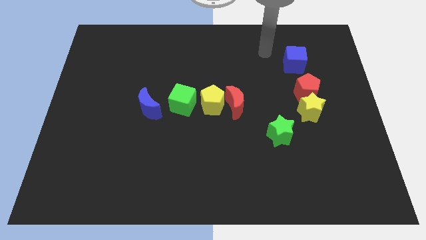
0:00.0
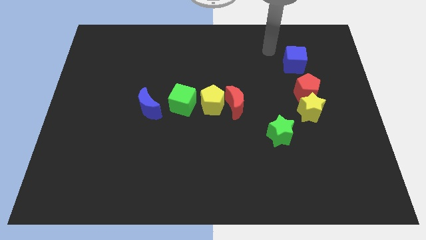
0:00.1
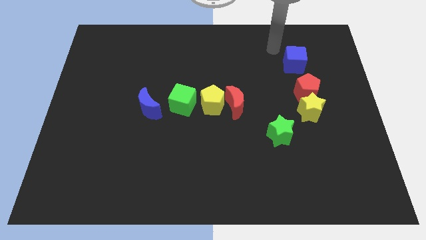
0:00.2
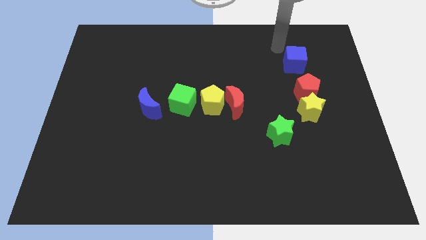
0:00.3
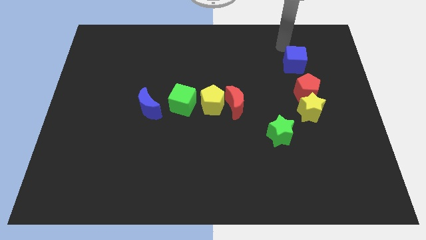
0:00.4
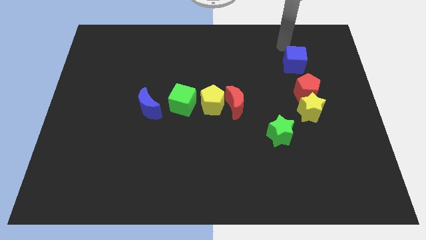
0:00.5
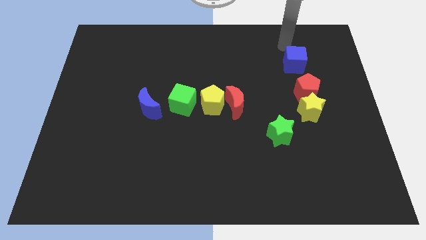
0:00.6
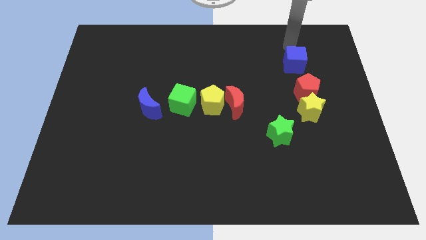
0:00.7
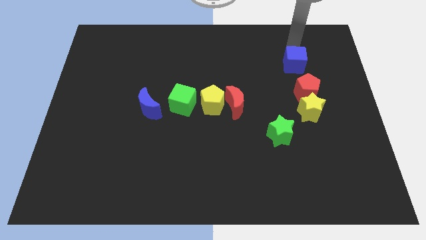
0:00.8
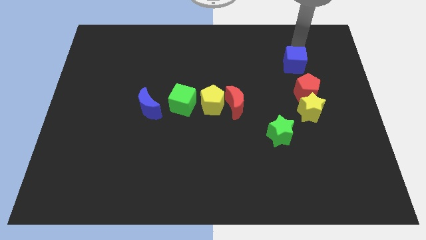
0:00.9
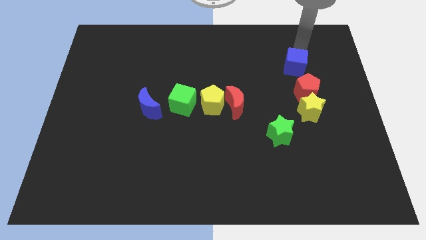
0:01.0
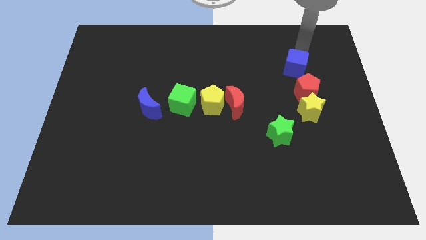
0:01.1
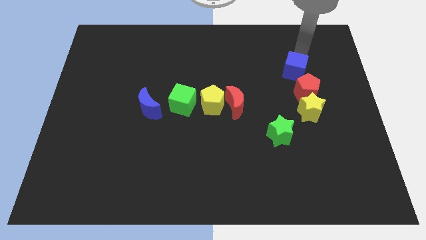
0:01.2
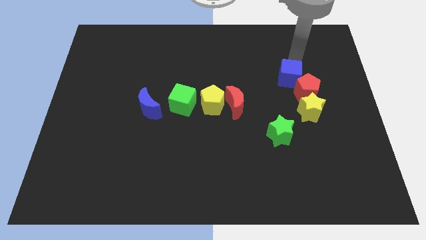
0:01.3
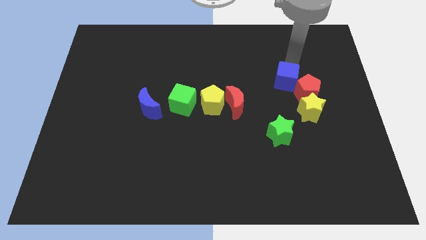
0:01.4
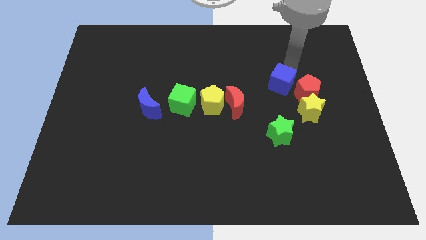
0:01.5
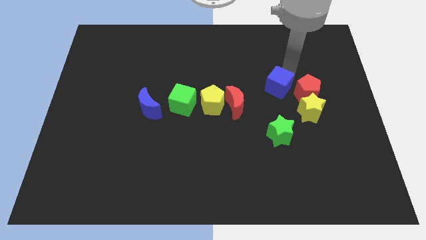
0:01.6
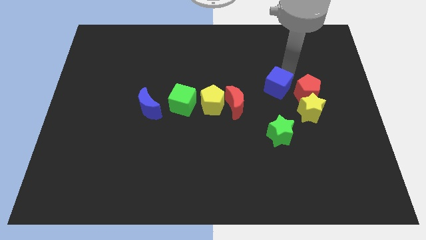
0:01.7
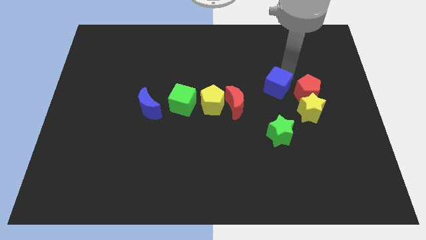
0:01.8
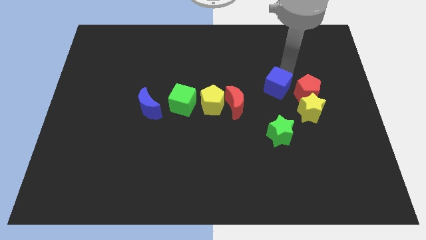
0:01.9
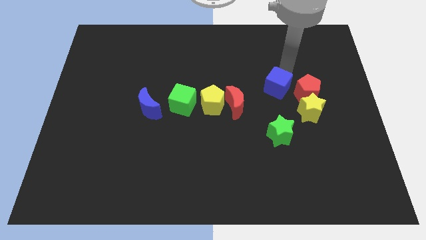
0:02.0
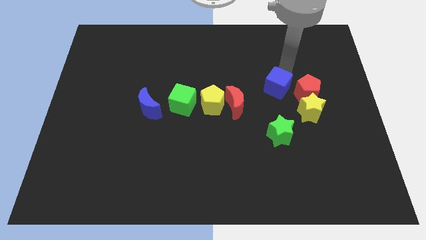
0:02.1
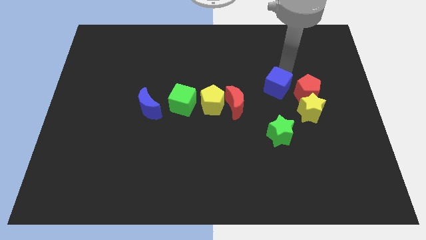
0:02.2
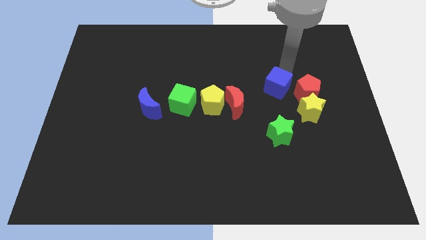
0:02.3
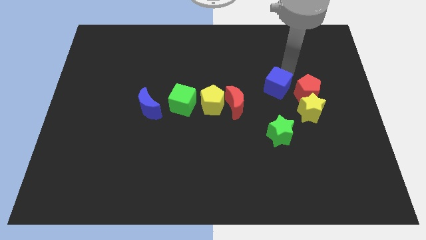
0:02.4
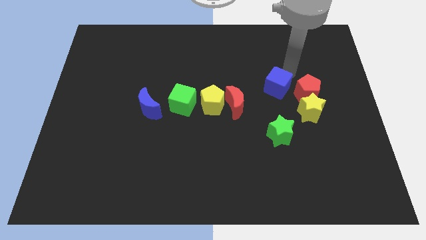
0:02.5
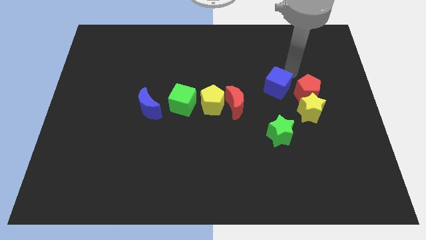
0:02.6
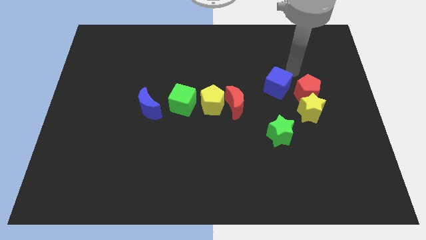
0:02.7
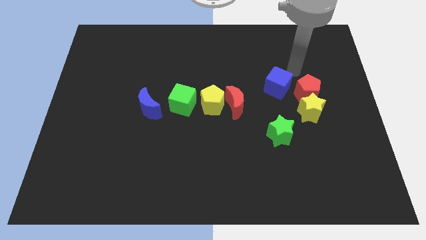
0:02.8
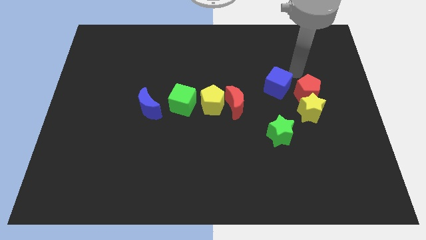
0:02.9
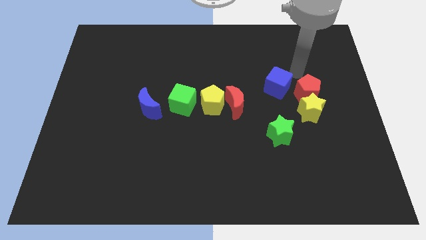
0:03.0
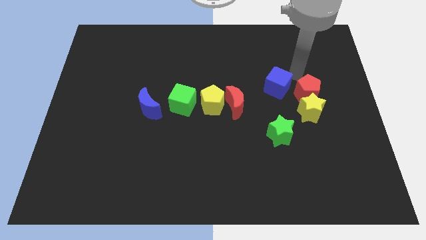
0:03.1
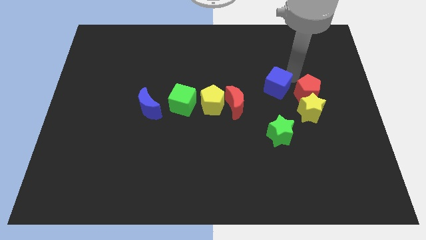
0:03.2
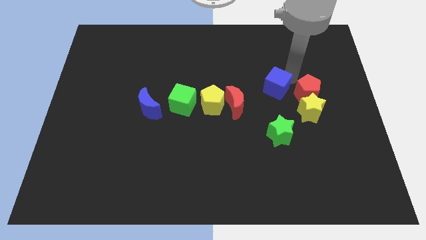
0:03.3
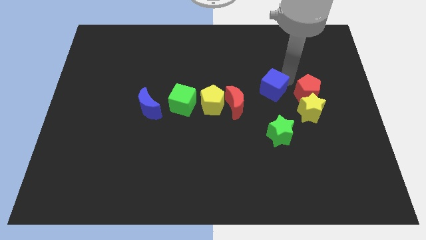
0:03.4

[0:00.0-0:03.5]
move the blue cube left to the red pentagon

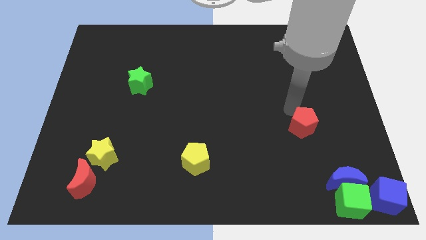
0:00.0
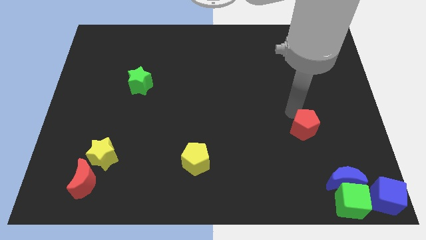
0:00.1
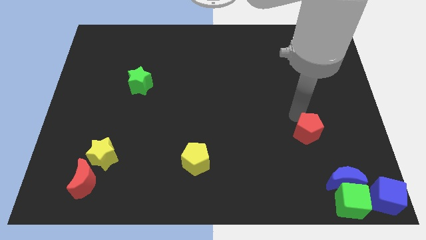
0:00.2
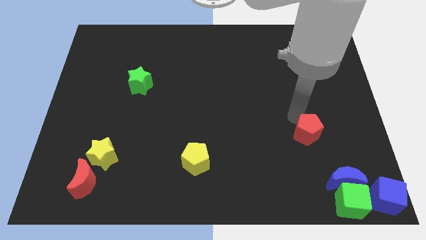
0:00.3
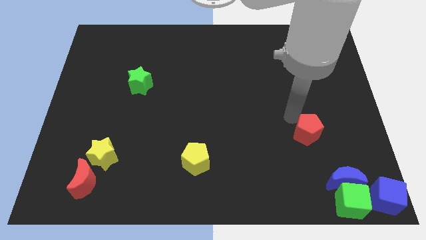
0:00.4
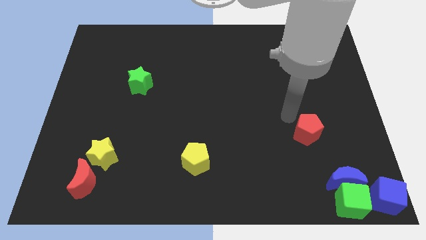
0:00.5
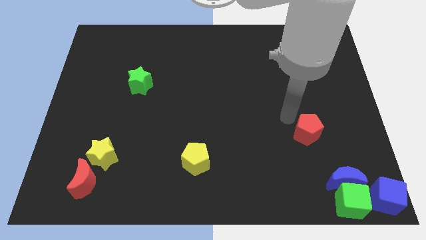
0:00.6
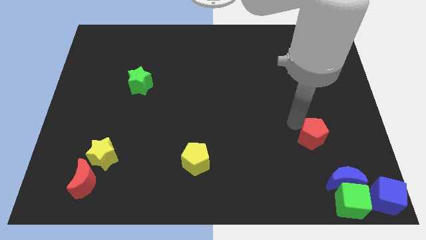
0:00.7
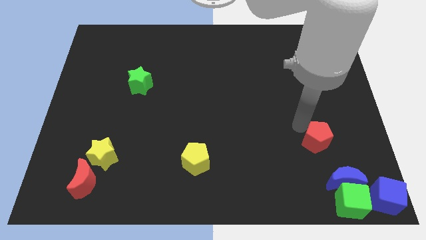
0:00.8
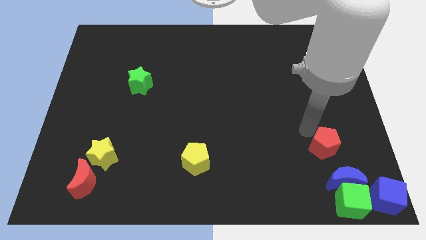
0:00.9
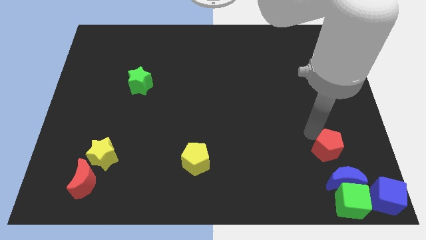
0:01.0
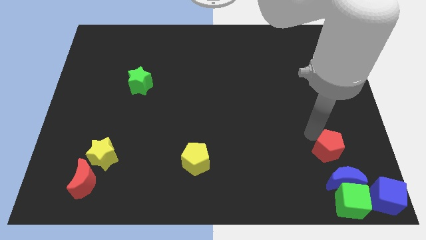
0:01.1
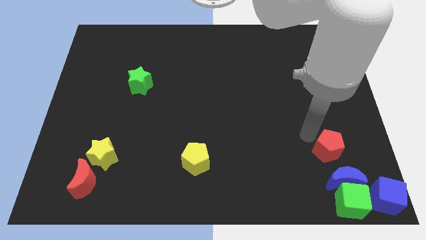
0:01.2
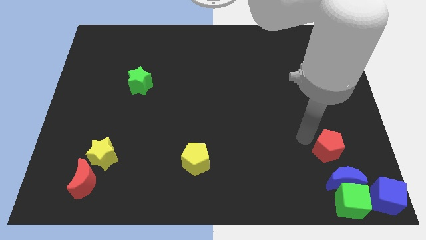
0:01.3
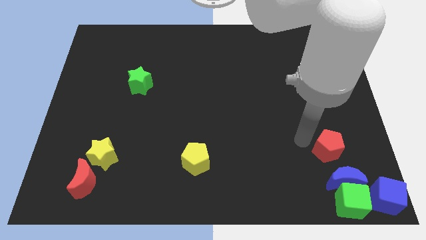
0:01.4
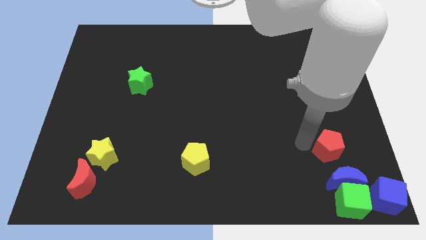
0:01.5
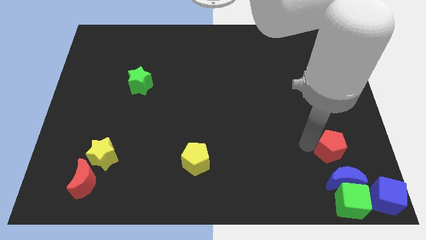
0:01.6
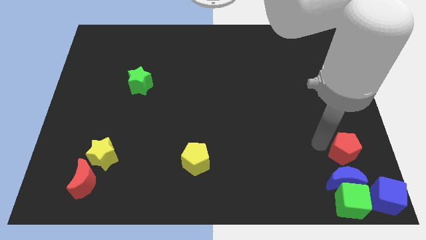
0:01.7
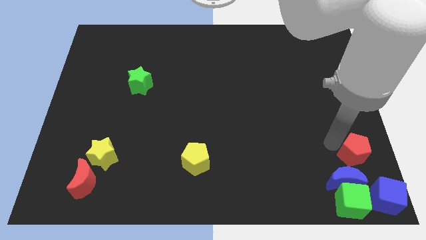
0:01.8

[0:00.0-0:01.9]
place the red pentagon above the blue moon

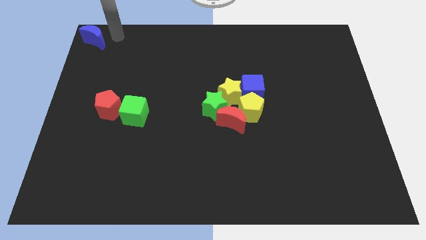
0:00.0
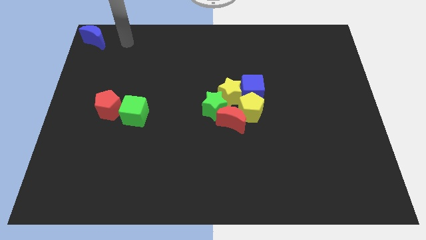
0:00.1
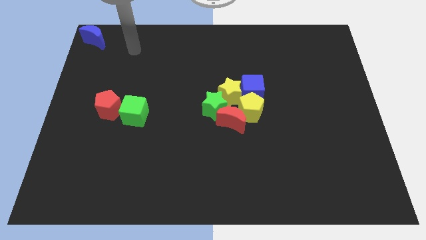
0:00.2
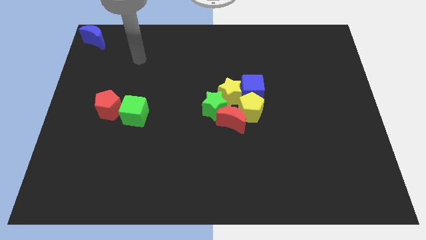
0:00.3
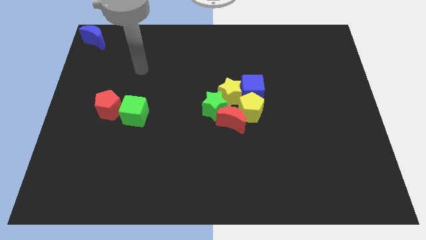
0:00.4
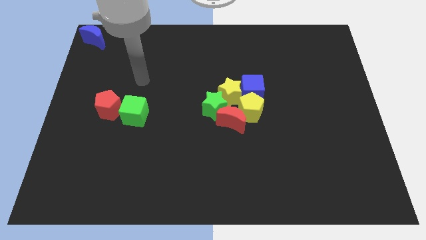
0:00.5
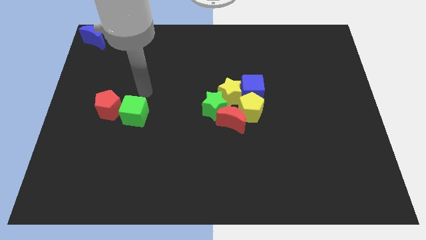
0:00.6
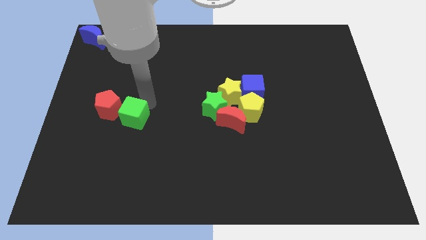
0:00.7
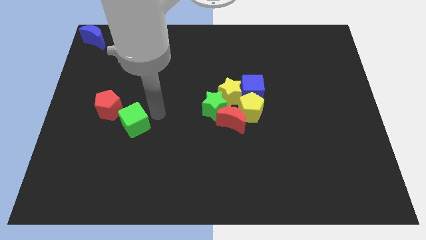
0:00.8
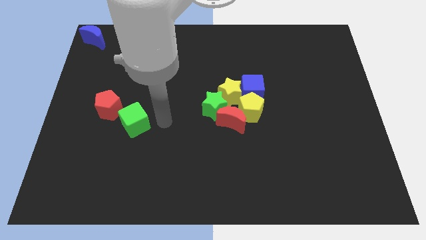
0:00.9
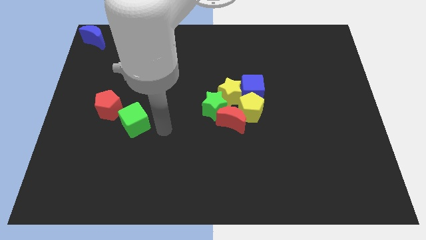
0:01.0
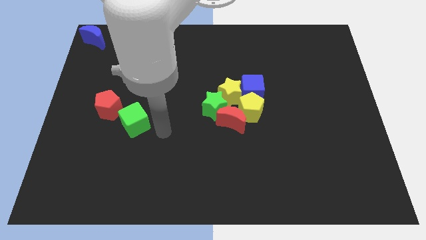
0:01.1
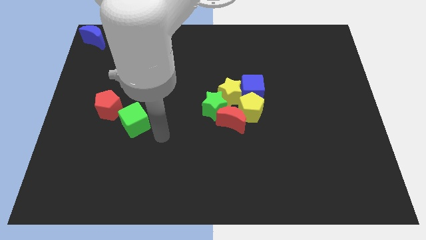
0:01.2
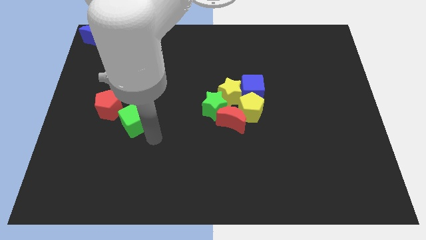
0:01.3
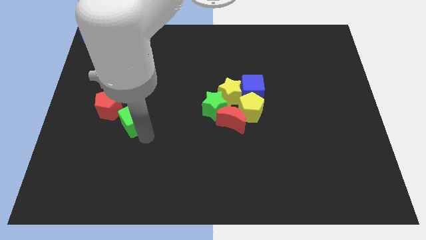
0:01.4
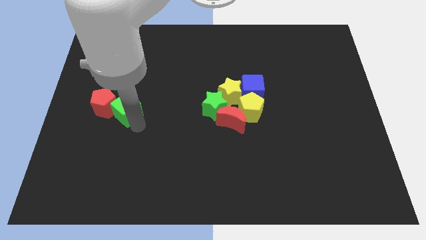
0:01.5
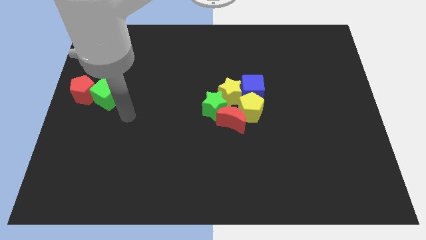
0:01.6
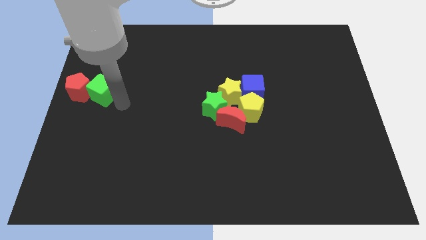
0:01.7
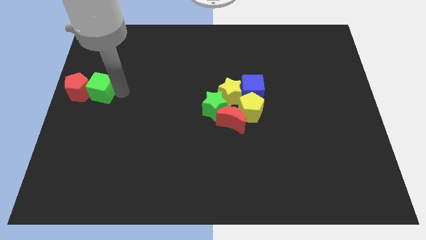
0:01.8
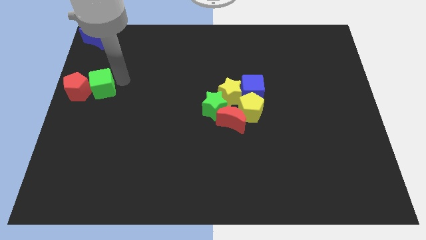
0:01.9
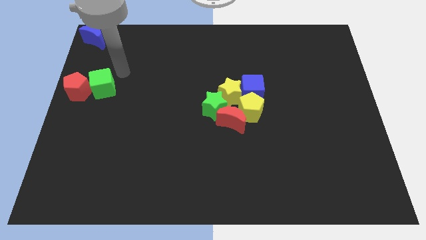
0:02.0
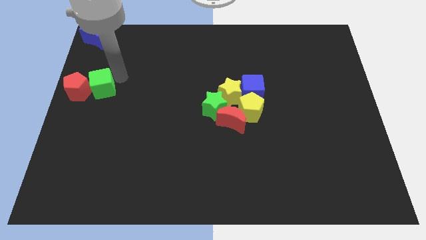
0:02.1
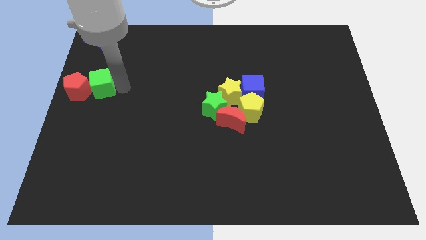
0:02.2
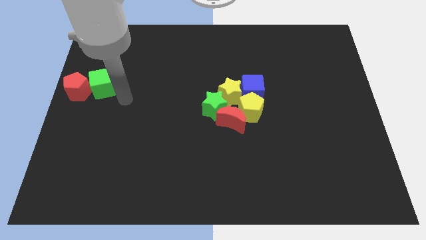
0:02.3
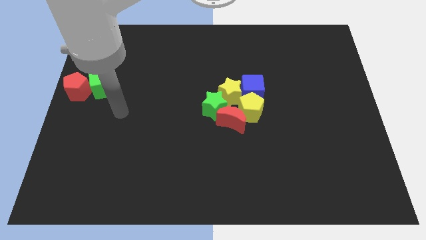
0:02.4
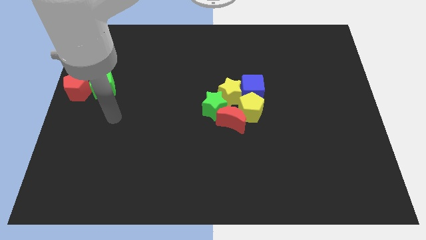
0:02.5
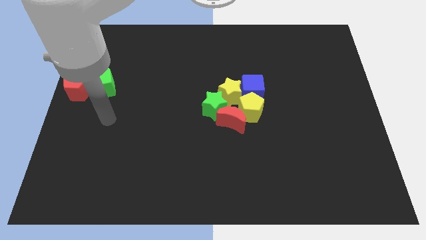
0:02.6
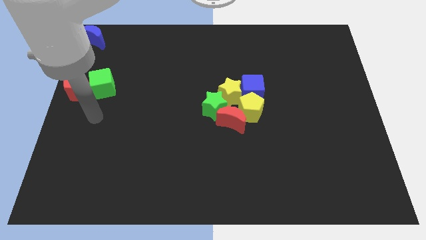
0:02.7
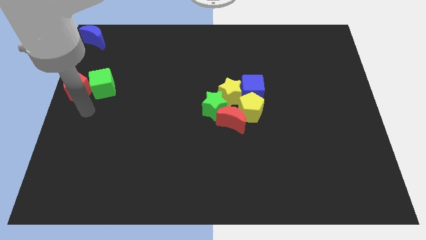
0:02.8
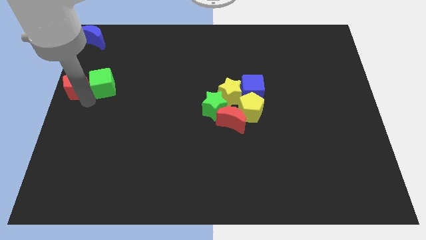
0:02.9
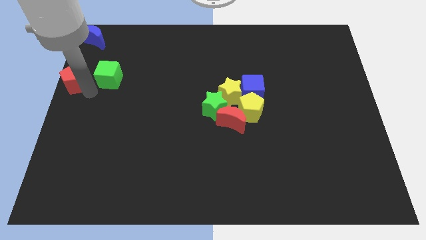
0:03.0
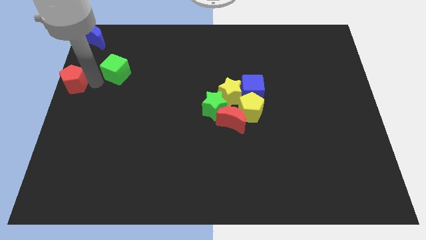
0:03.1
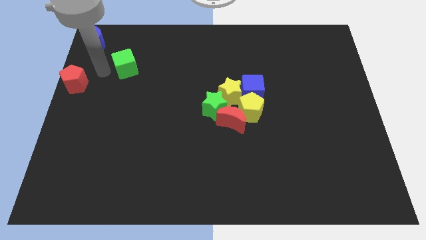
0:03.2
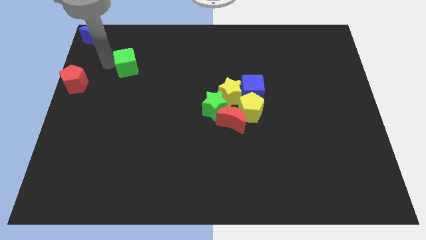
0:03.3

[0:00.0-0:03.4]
move red pentagon and green cube towards left

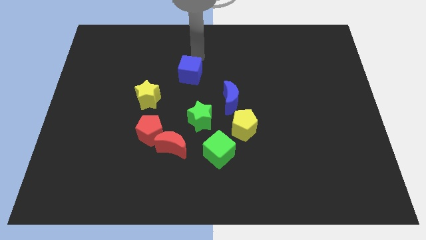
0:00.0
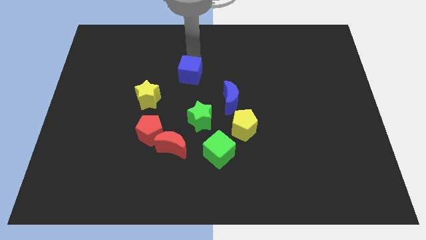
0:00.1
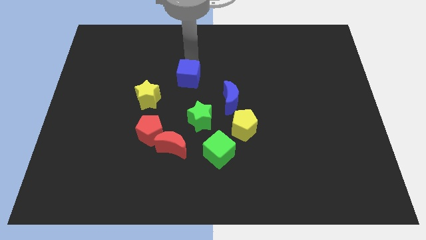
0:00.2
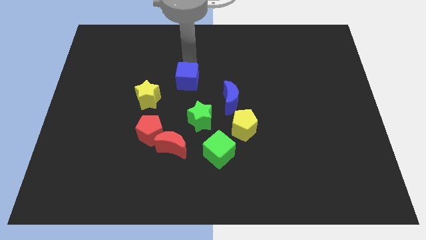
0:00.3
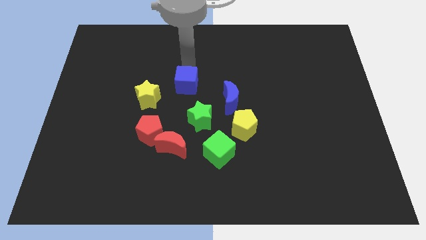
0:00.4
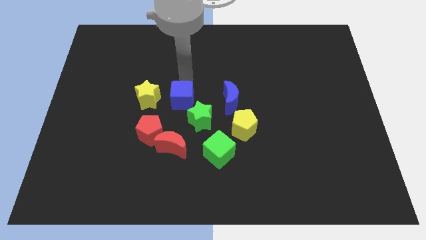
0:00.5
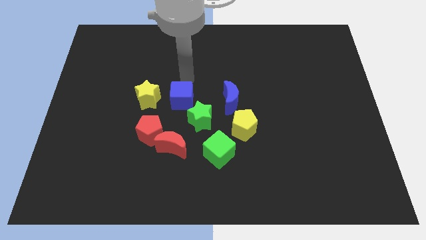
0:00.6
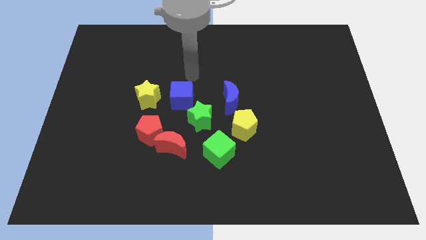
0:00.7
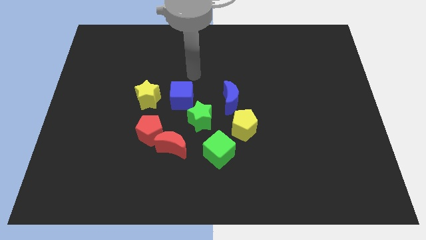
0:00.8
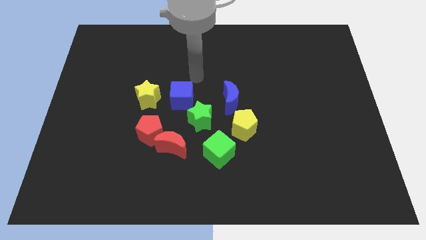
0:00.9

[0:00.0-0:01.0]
push the blue cube to the center of the board
